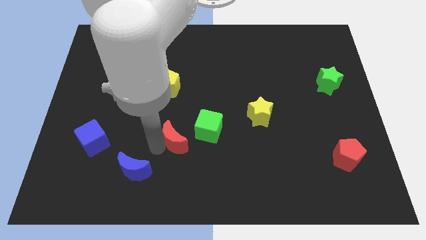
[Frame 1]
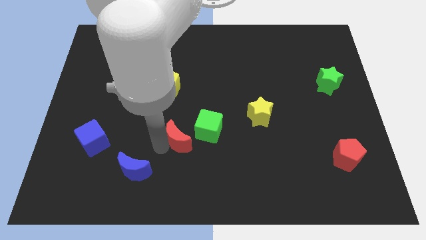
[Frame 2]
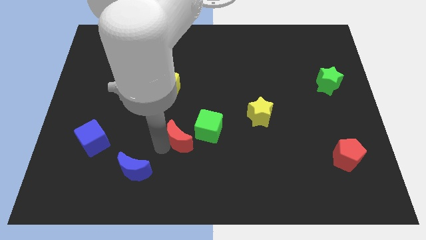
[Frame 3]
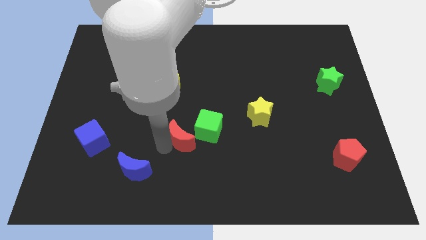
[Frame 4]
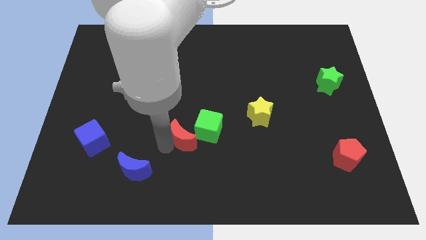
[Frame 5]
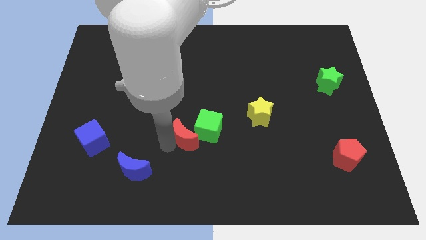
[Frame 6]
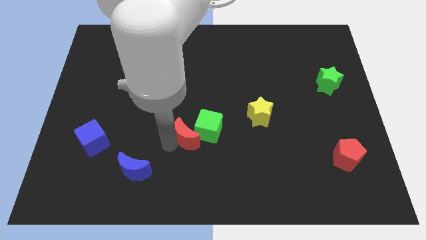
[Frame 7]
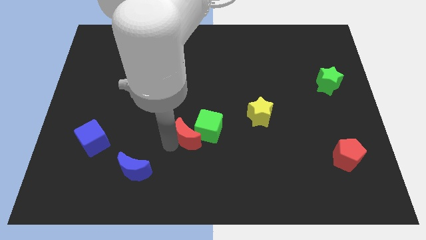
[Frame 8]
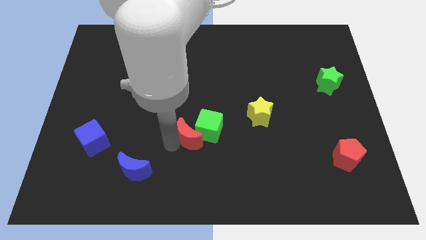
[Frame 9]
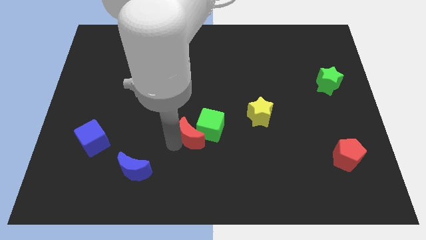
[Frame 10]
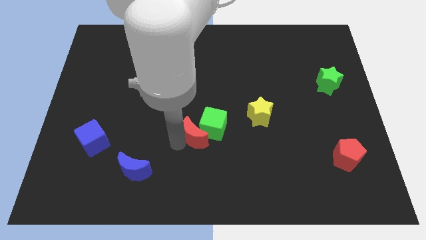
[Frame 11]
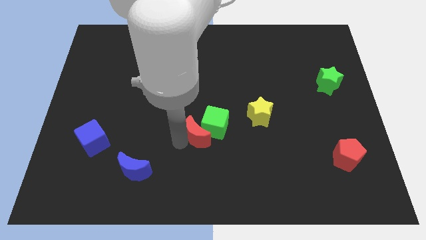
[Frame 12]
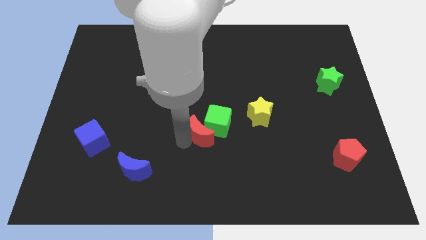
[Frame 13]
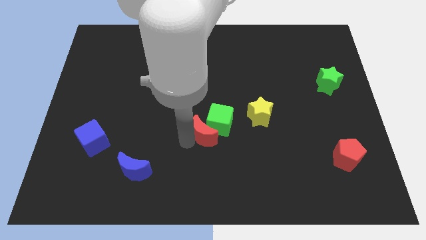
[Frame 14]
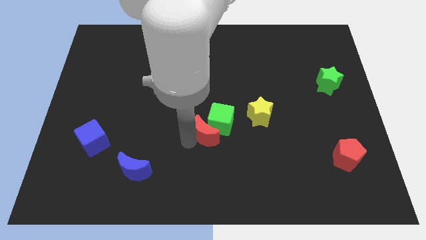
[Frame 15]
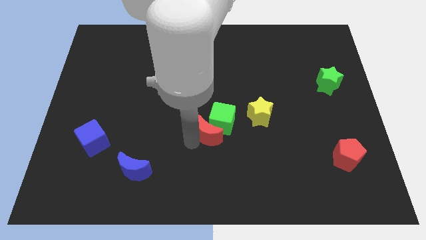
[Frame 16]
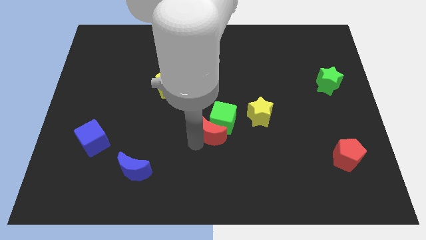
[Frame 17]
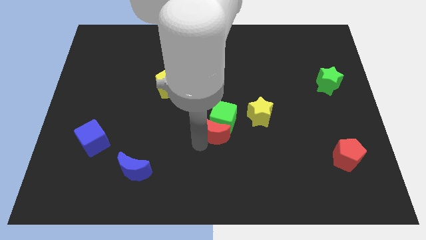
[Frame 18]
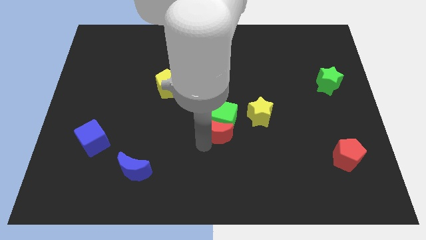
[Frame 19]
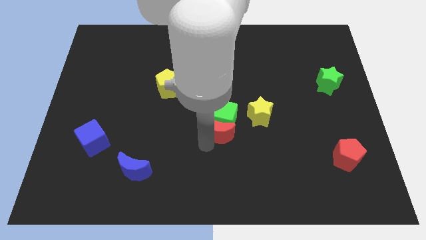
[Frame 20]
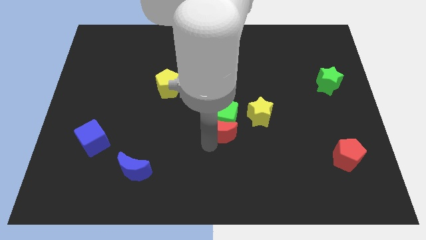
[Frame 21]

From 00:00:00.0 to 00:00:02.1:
move the red moon into the green cube

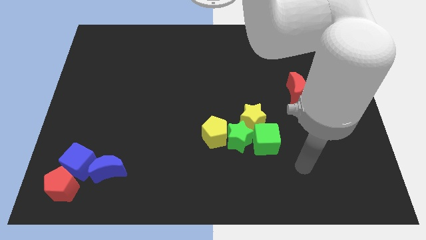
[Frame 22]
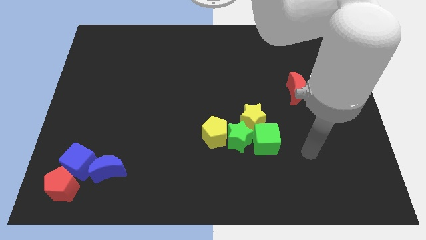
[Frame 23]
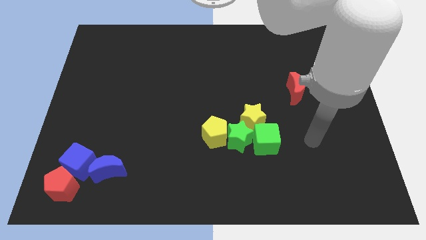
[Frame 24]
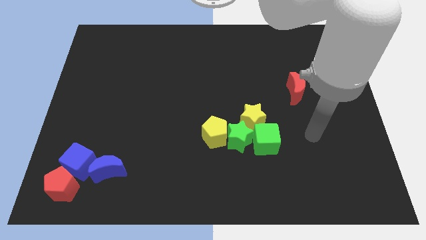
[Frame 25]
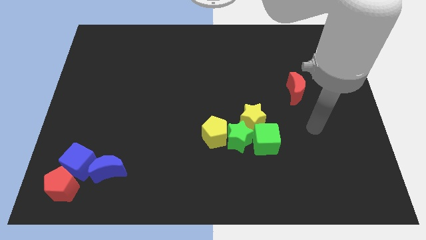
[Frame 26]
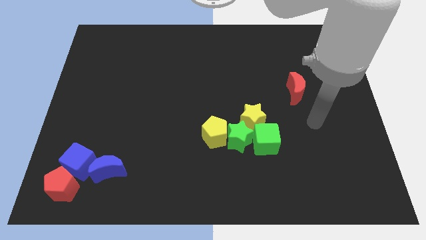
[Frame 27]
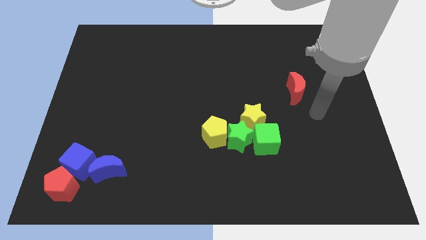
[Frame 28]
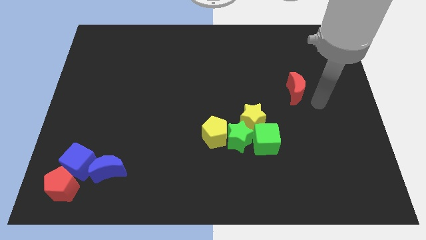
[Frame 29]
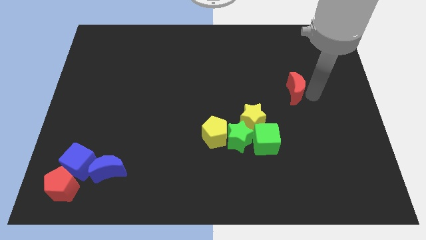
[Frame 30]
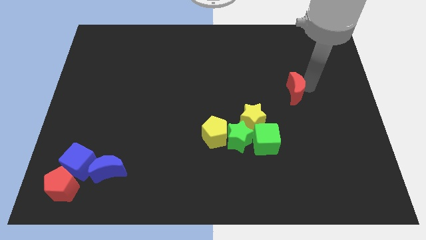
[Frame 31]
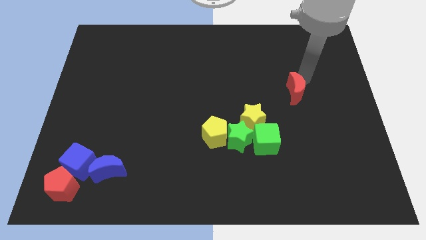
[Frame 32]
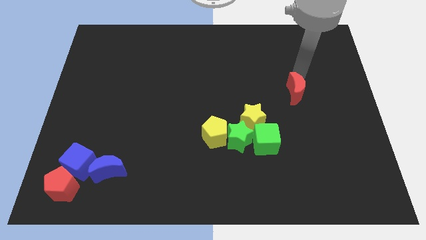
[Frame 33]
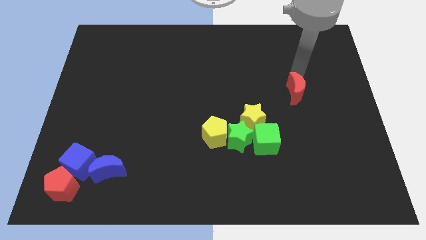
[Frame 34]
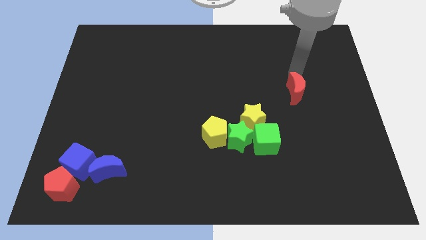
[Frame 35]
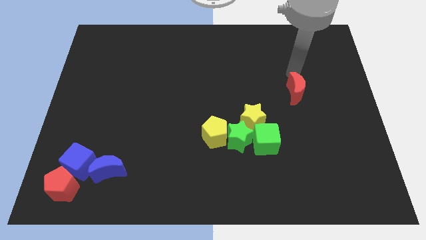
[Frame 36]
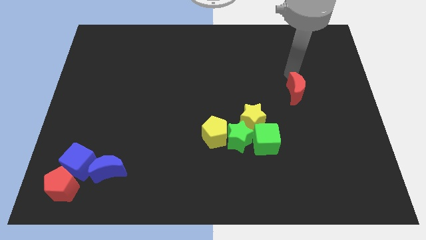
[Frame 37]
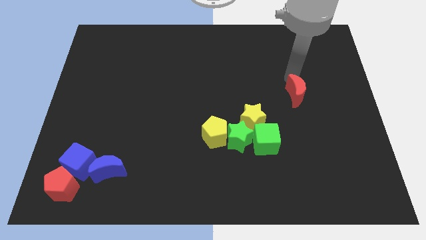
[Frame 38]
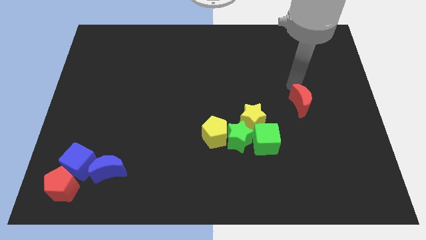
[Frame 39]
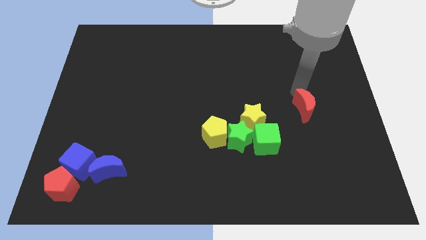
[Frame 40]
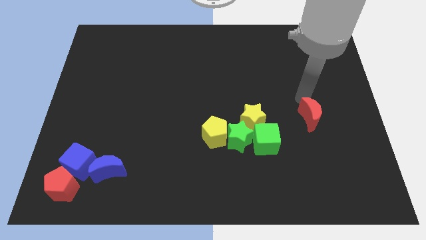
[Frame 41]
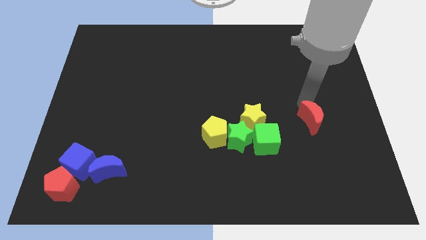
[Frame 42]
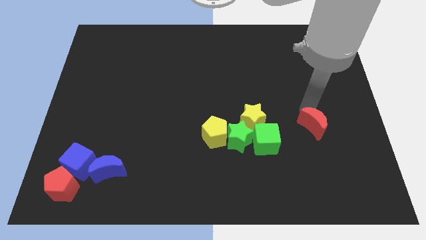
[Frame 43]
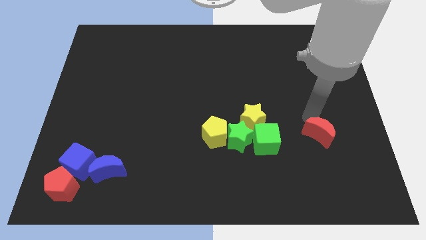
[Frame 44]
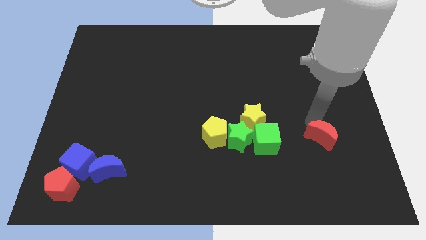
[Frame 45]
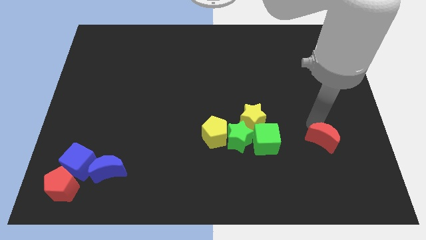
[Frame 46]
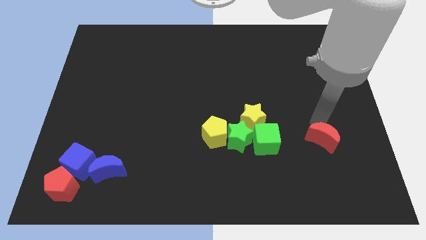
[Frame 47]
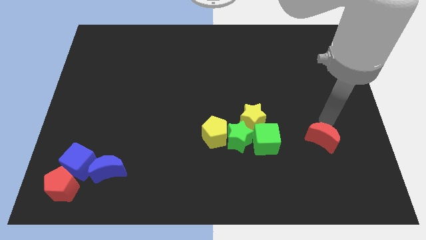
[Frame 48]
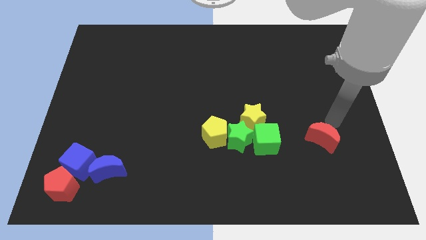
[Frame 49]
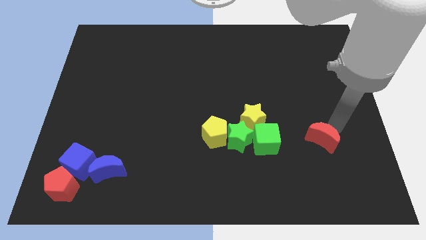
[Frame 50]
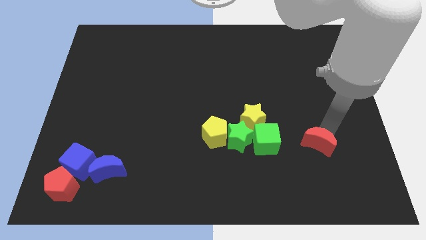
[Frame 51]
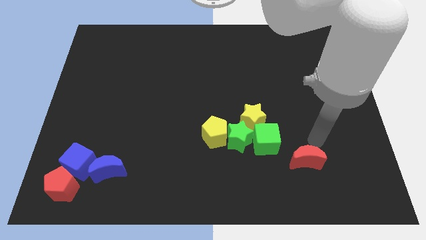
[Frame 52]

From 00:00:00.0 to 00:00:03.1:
move the red moon near to the green cube

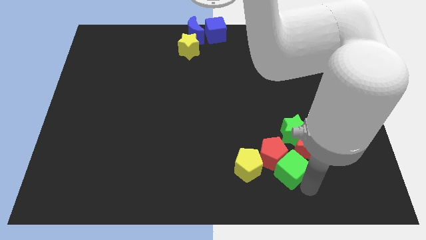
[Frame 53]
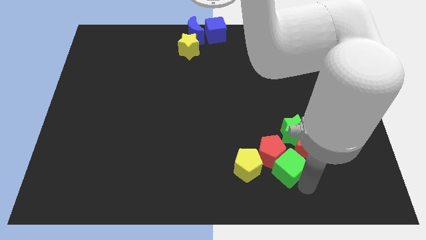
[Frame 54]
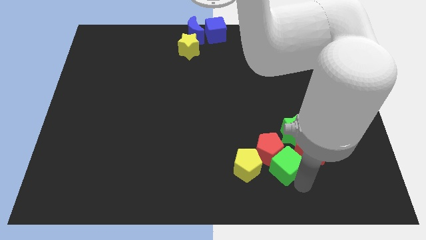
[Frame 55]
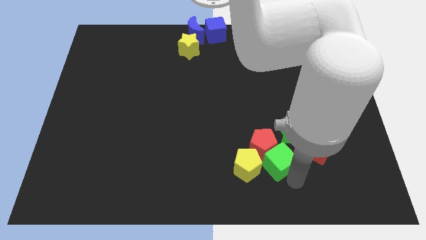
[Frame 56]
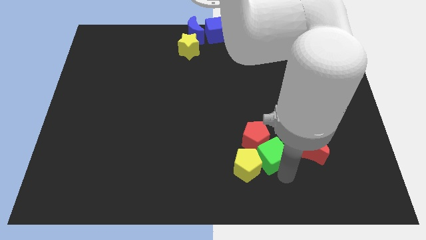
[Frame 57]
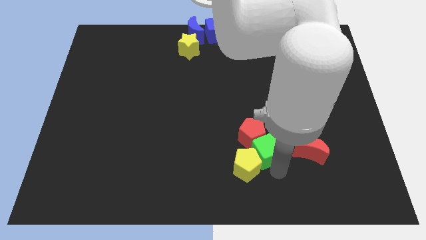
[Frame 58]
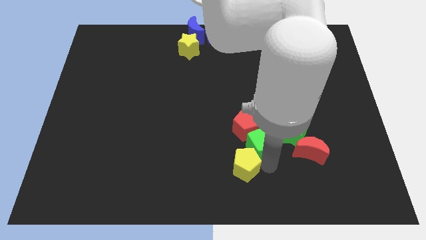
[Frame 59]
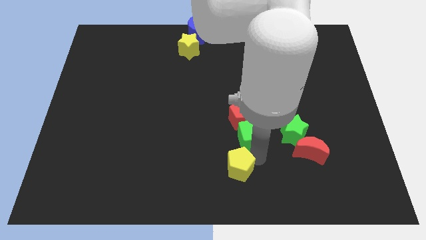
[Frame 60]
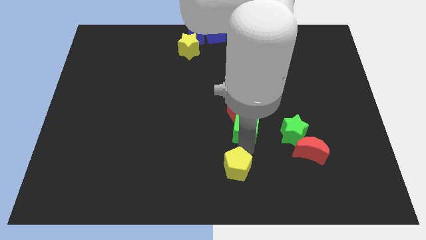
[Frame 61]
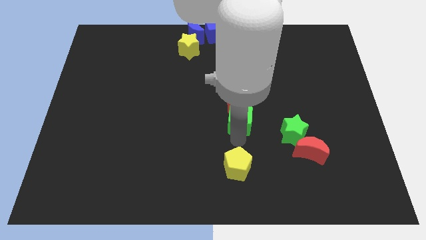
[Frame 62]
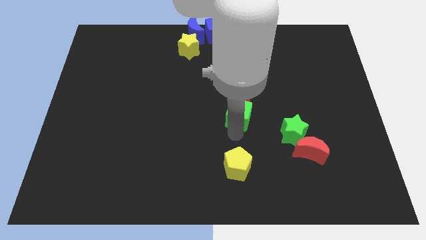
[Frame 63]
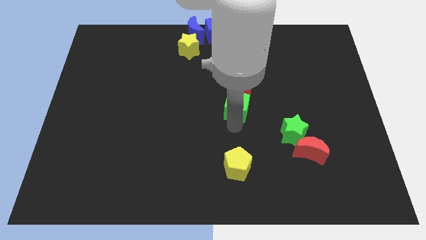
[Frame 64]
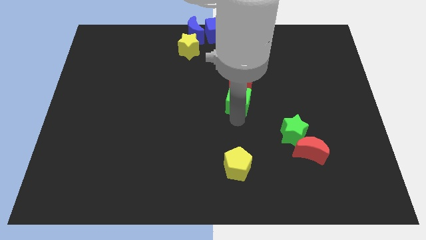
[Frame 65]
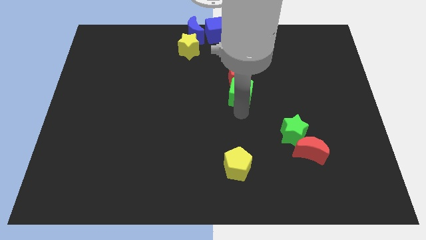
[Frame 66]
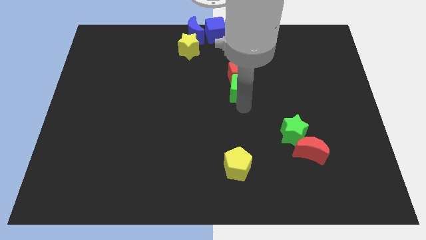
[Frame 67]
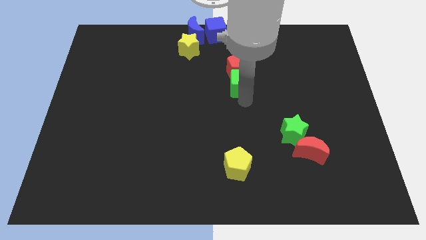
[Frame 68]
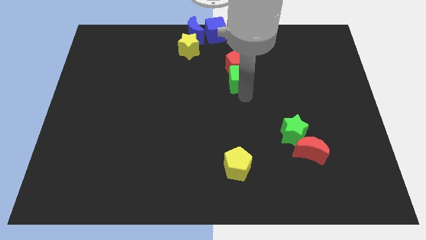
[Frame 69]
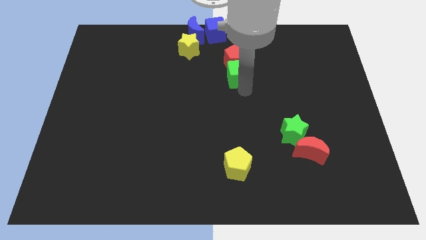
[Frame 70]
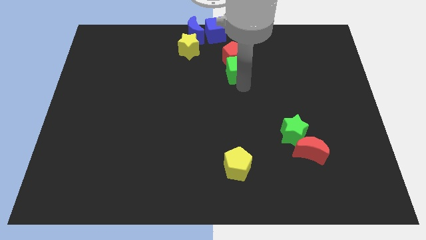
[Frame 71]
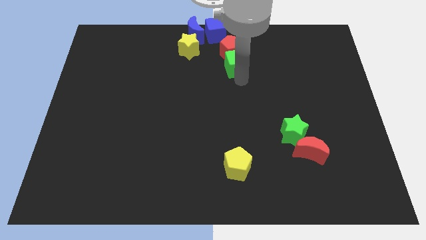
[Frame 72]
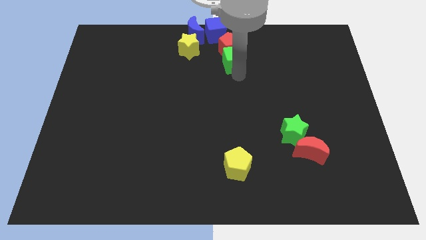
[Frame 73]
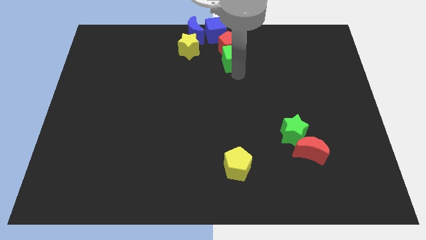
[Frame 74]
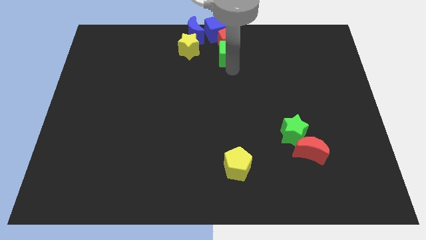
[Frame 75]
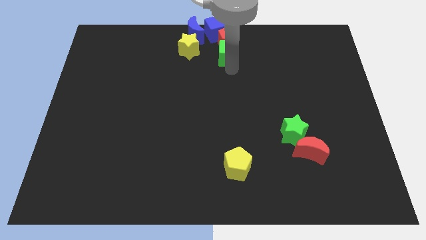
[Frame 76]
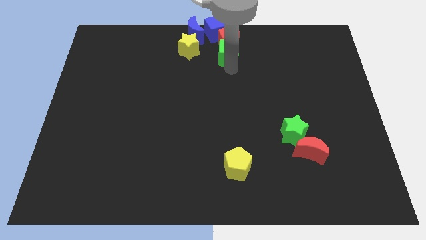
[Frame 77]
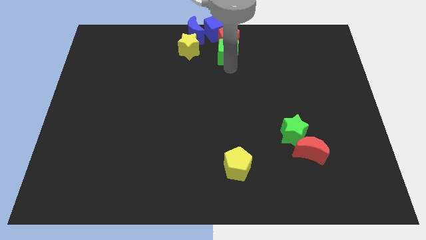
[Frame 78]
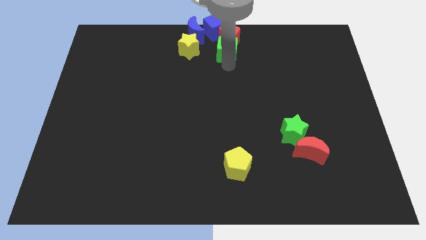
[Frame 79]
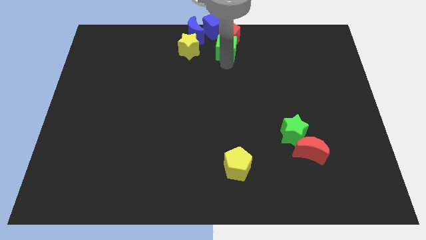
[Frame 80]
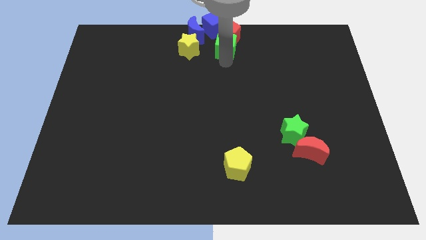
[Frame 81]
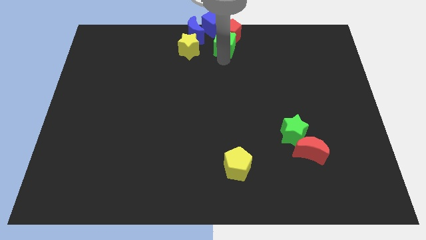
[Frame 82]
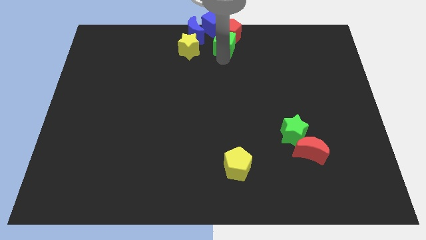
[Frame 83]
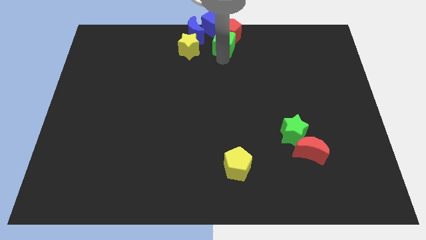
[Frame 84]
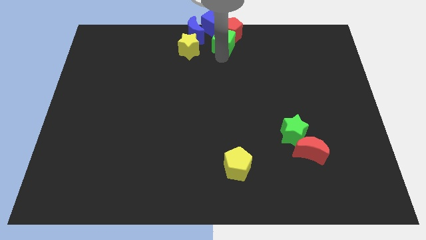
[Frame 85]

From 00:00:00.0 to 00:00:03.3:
push the red pentagon and green cube towards the top center

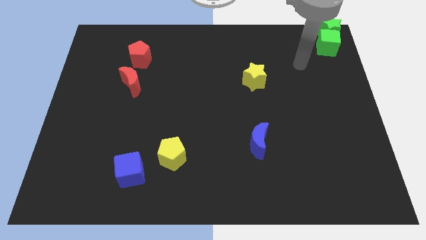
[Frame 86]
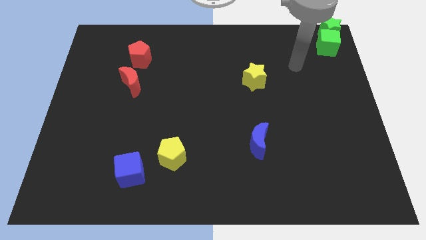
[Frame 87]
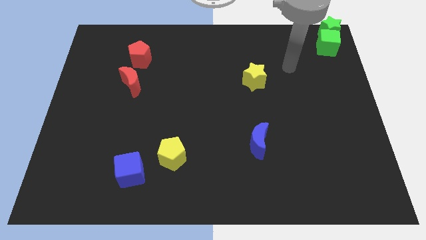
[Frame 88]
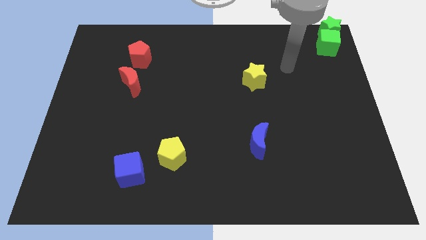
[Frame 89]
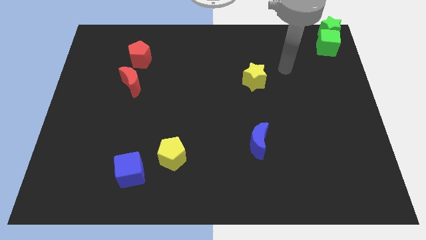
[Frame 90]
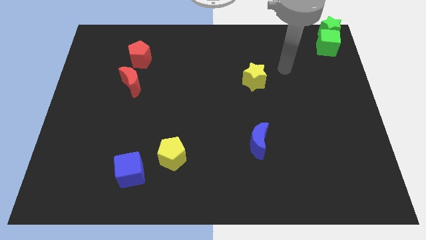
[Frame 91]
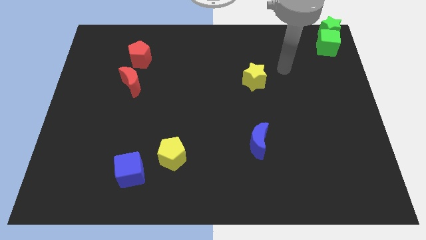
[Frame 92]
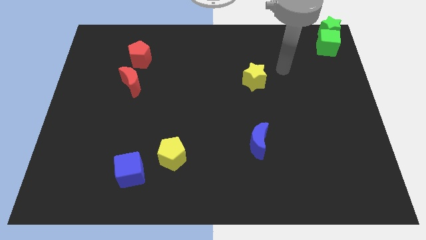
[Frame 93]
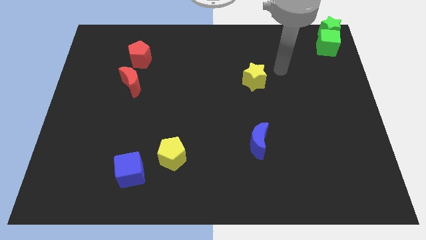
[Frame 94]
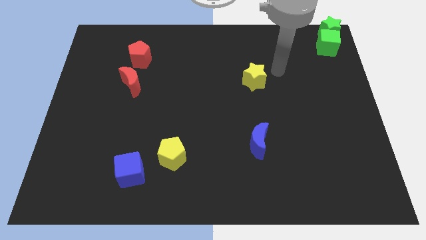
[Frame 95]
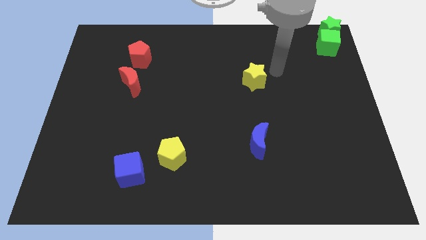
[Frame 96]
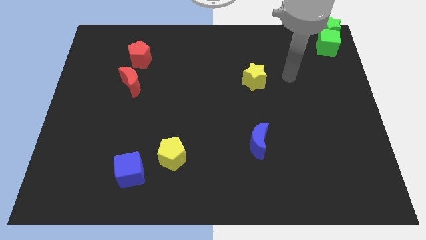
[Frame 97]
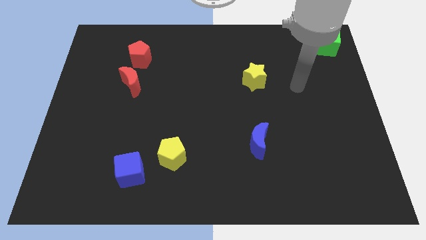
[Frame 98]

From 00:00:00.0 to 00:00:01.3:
point your arm at the right of the yellow star
